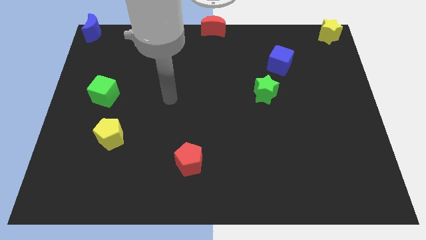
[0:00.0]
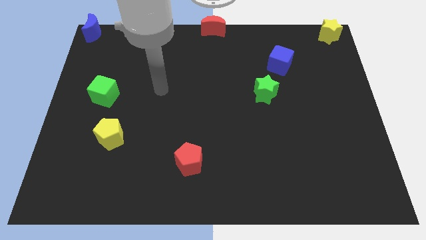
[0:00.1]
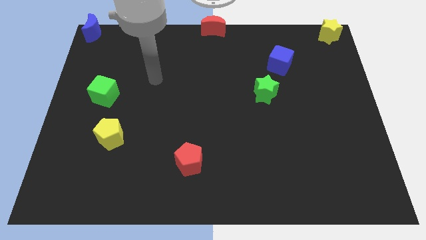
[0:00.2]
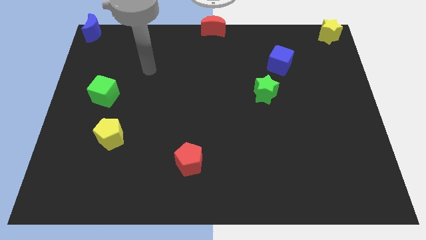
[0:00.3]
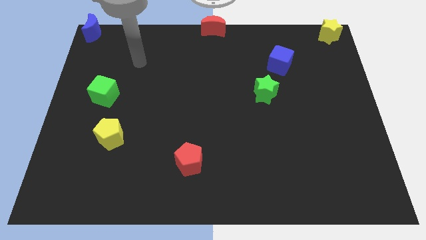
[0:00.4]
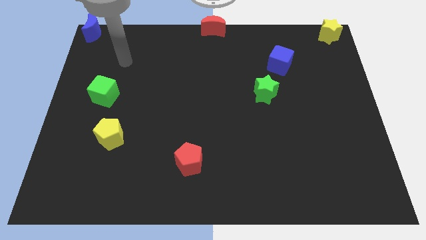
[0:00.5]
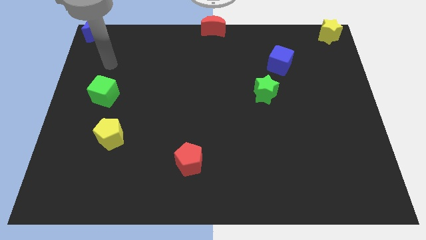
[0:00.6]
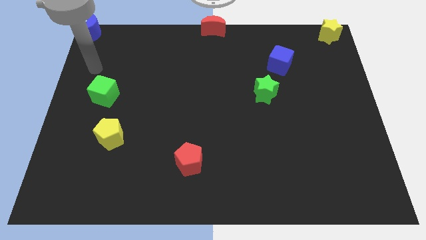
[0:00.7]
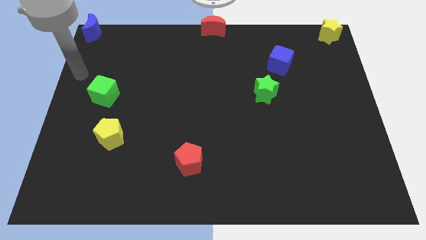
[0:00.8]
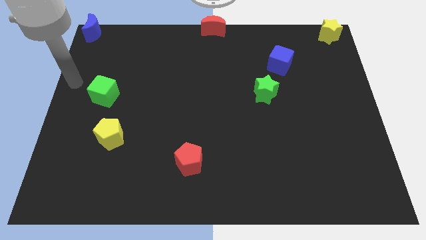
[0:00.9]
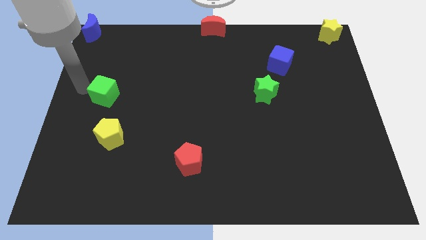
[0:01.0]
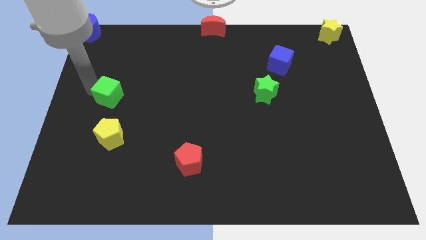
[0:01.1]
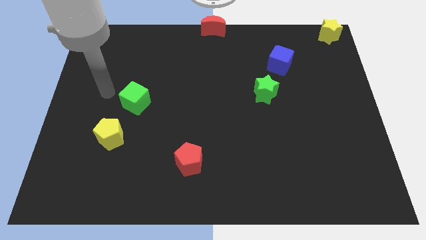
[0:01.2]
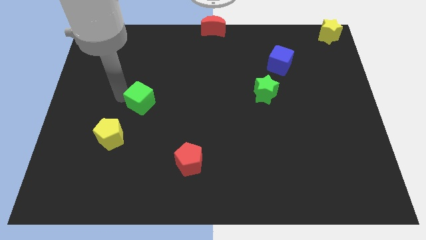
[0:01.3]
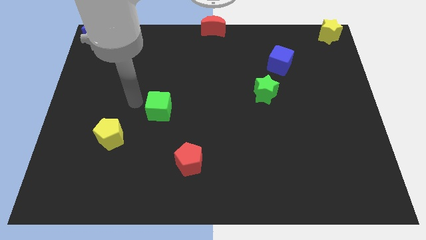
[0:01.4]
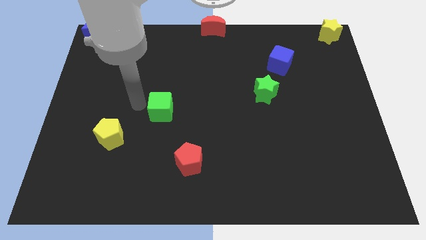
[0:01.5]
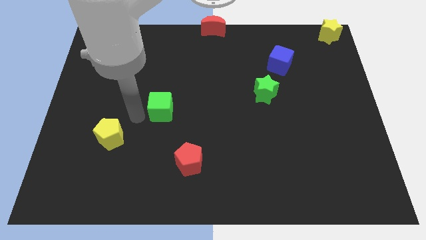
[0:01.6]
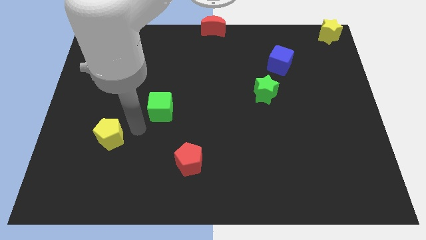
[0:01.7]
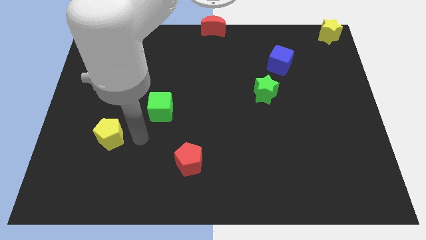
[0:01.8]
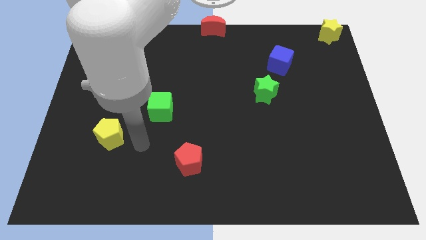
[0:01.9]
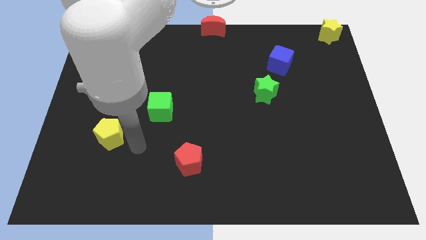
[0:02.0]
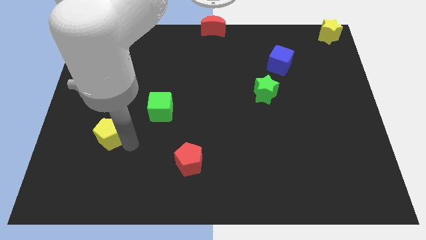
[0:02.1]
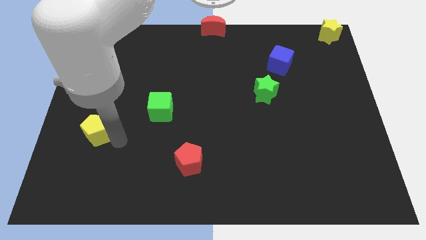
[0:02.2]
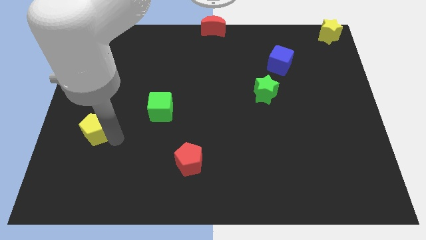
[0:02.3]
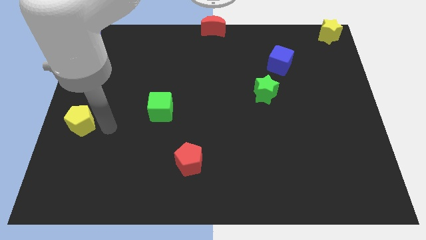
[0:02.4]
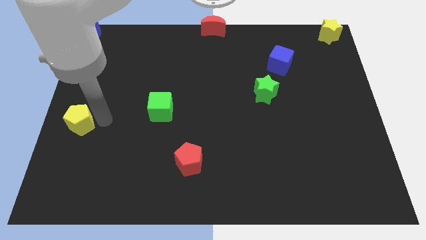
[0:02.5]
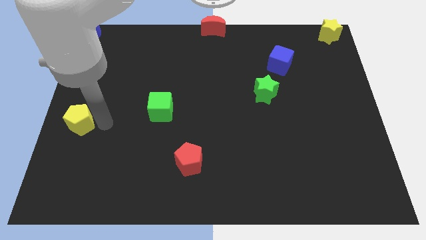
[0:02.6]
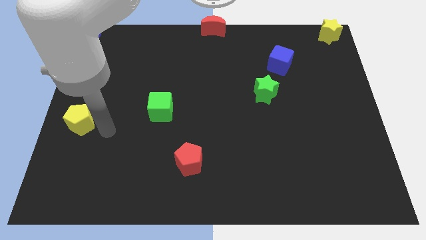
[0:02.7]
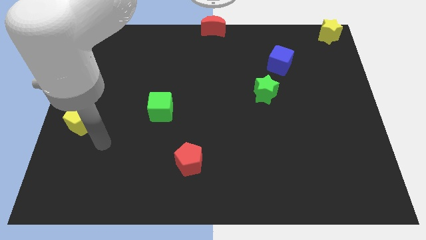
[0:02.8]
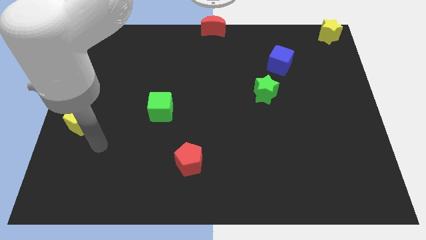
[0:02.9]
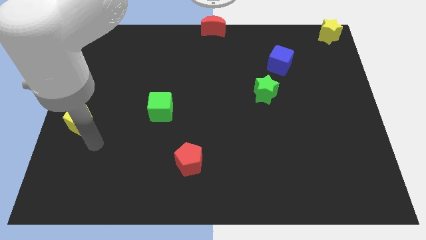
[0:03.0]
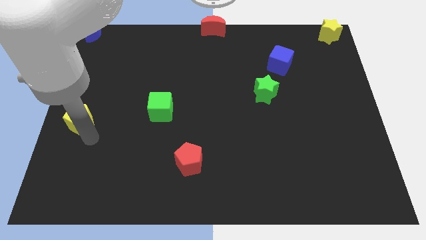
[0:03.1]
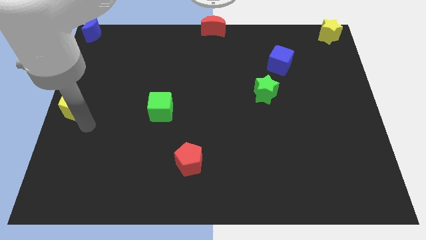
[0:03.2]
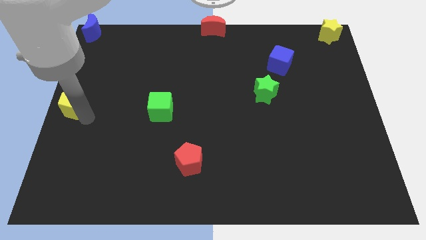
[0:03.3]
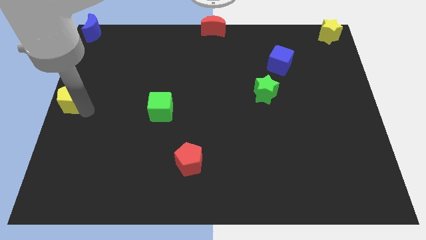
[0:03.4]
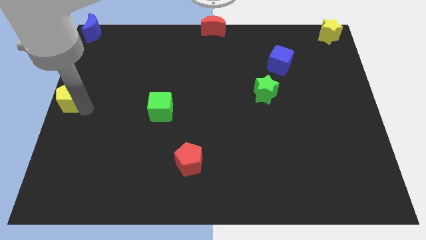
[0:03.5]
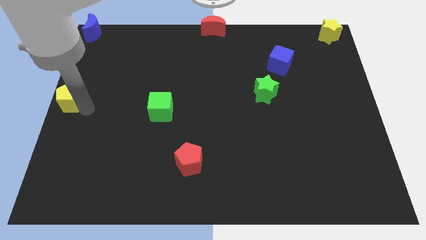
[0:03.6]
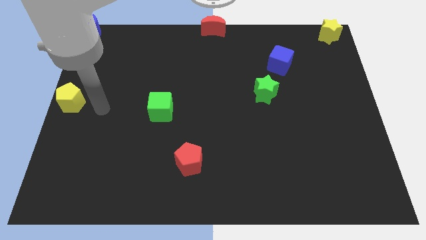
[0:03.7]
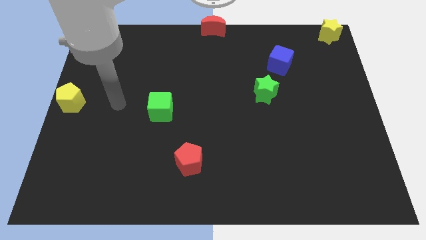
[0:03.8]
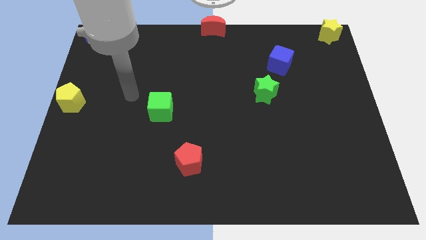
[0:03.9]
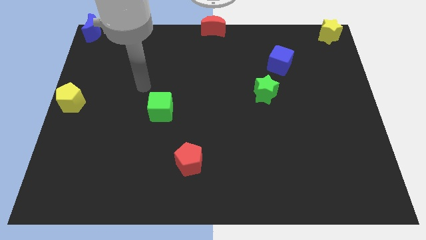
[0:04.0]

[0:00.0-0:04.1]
adjust green cube and yellow pentagon parallel to each other

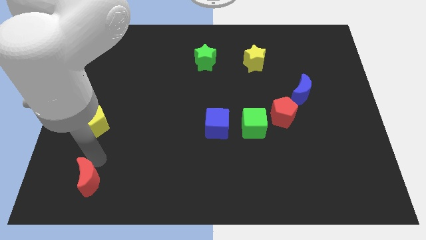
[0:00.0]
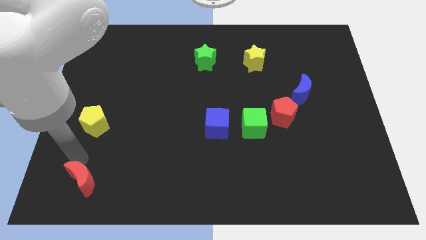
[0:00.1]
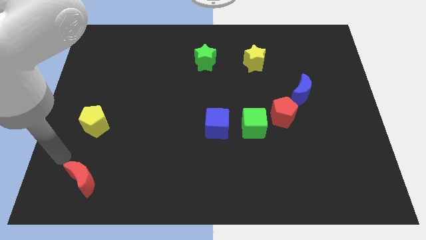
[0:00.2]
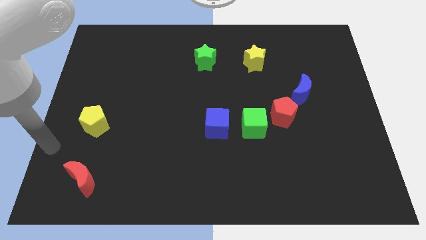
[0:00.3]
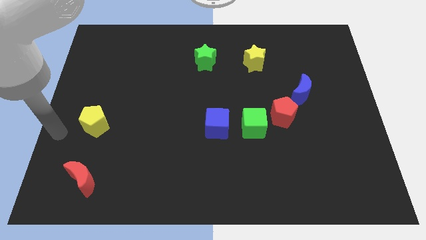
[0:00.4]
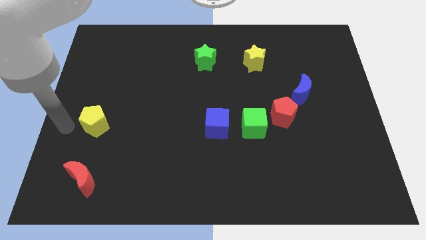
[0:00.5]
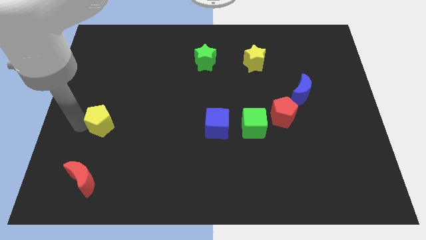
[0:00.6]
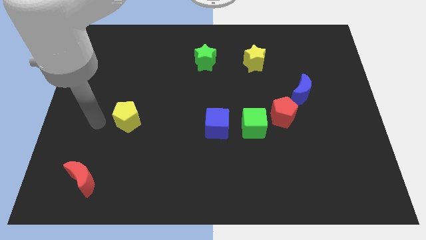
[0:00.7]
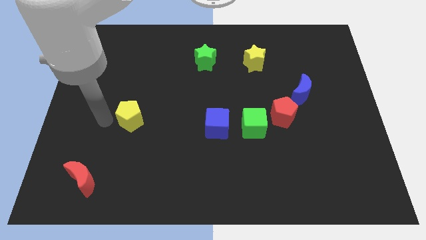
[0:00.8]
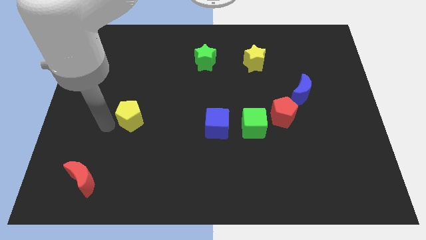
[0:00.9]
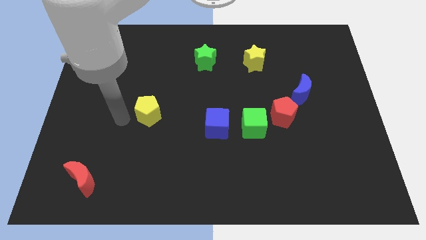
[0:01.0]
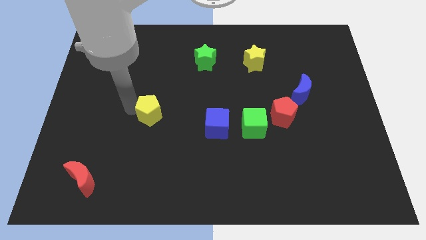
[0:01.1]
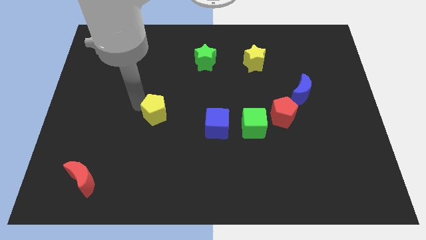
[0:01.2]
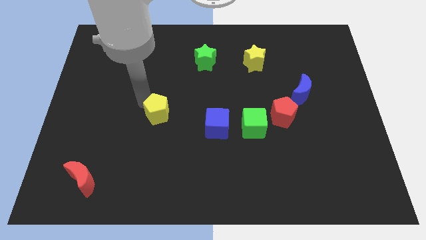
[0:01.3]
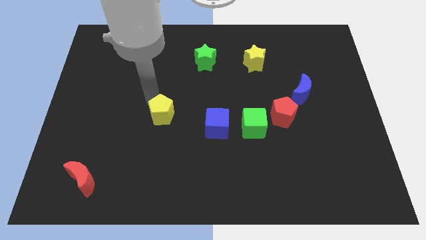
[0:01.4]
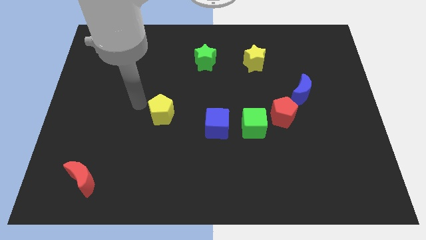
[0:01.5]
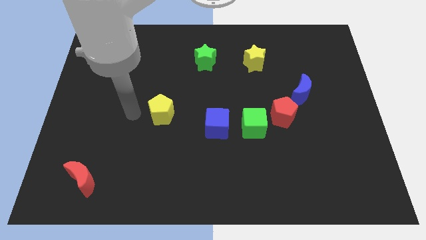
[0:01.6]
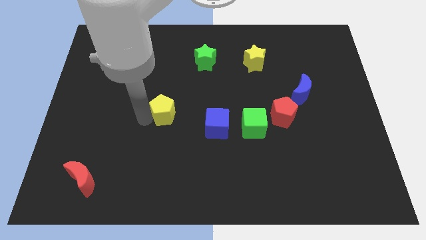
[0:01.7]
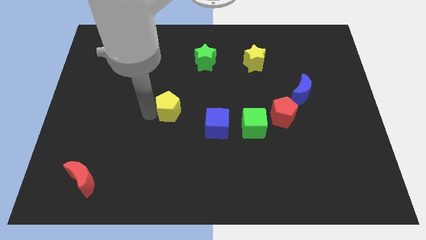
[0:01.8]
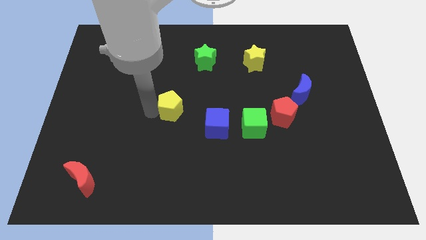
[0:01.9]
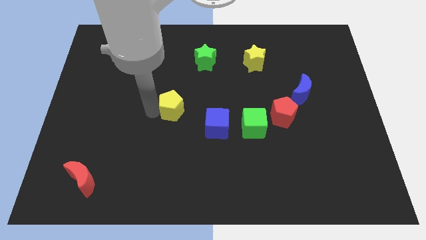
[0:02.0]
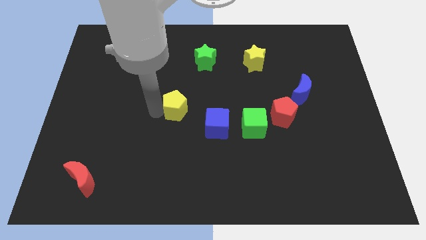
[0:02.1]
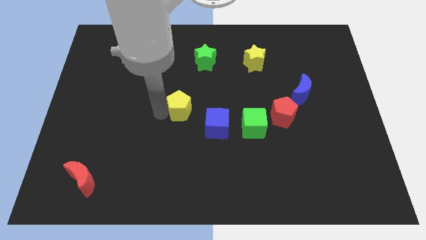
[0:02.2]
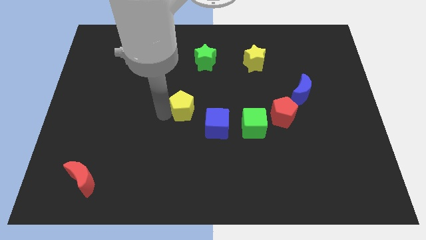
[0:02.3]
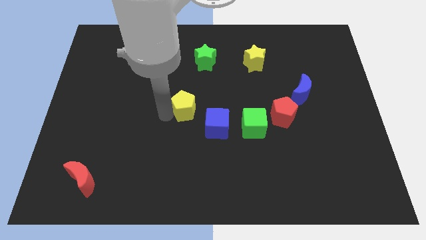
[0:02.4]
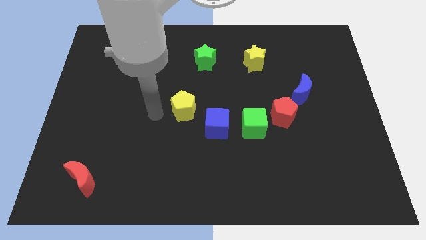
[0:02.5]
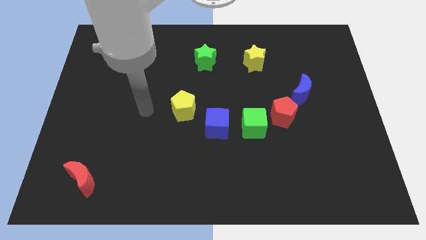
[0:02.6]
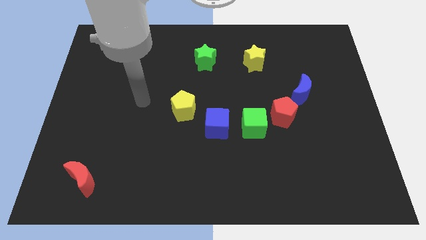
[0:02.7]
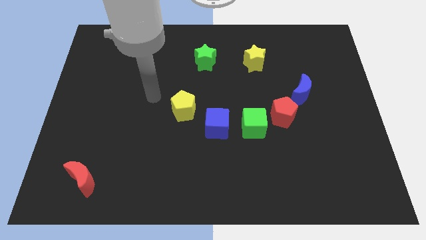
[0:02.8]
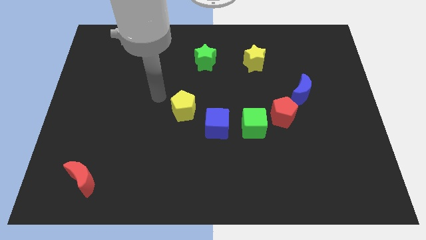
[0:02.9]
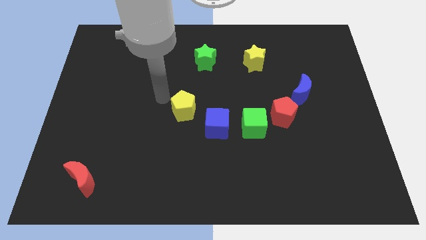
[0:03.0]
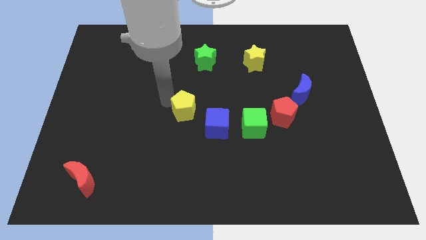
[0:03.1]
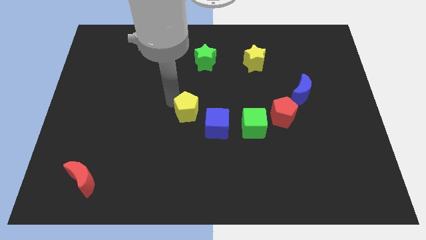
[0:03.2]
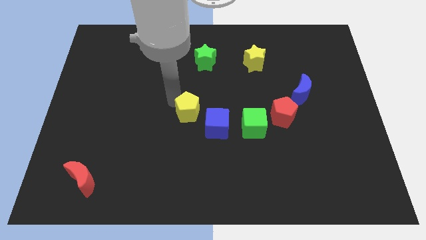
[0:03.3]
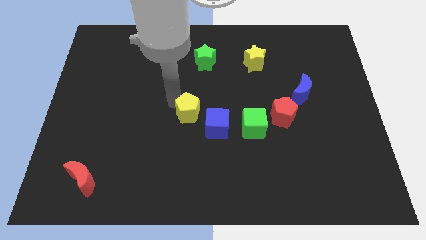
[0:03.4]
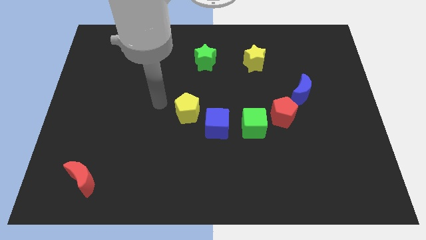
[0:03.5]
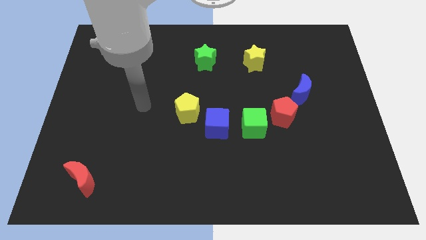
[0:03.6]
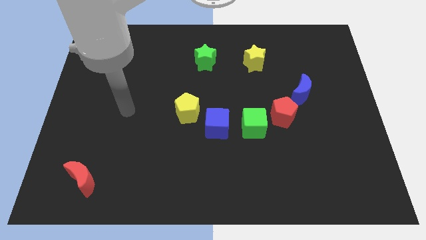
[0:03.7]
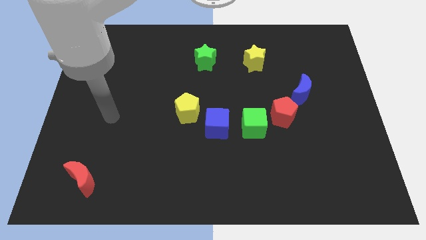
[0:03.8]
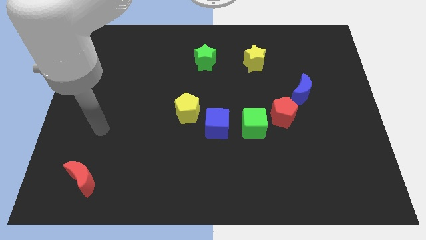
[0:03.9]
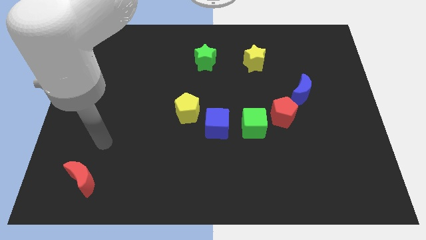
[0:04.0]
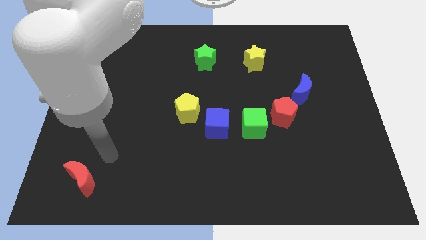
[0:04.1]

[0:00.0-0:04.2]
move the yellow pentagon to the left of the blue cube

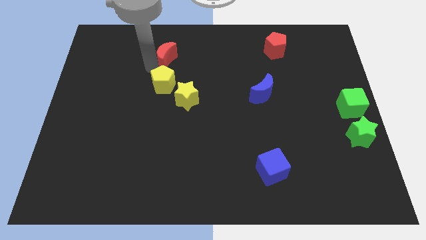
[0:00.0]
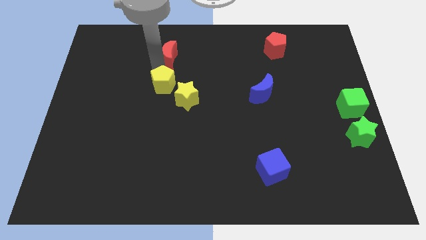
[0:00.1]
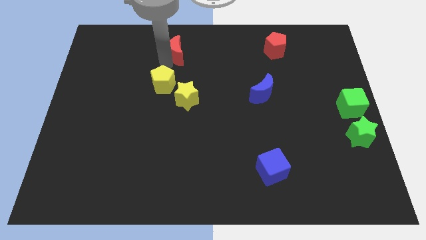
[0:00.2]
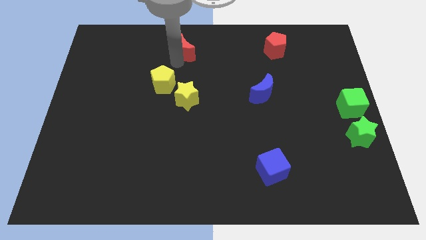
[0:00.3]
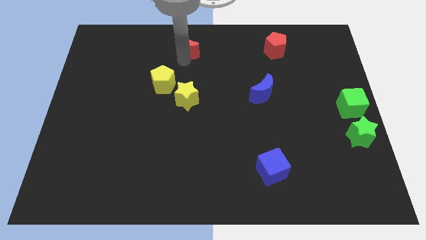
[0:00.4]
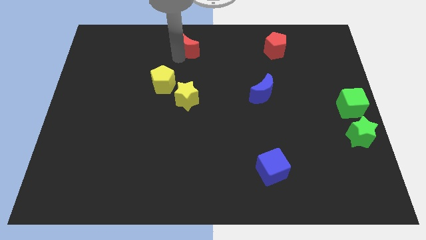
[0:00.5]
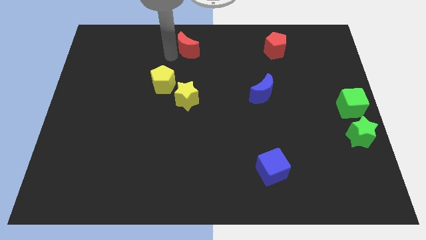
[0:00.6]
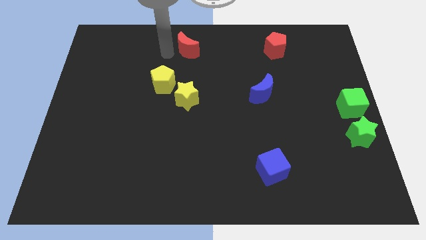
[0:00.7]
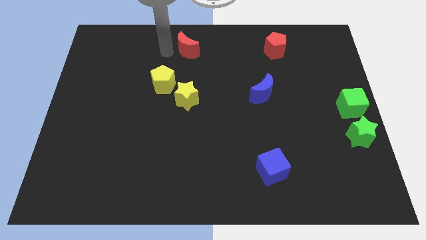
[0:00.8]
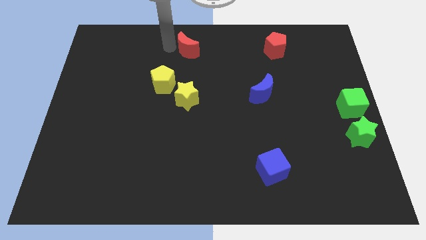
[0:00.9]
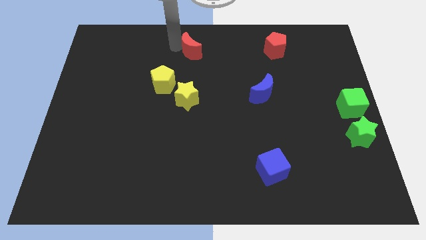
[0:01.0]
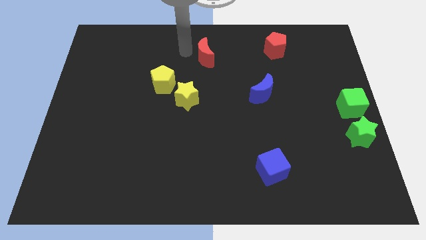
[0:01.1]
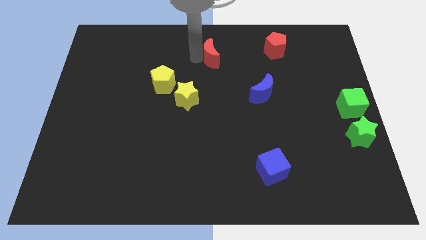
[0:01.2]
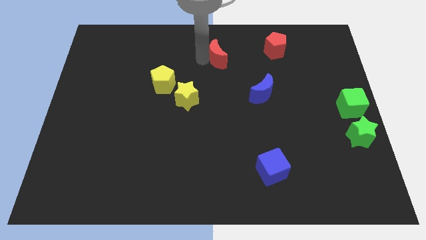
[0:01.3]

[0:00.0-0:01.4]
move the red moon to the top center
